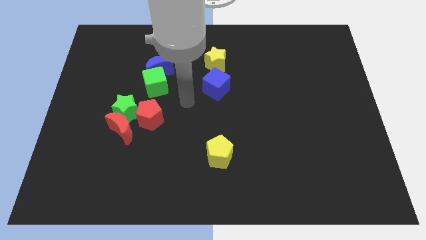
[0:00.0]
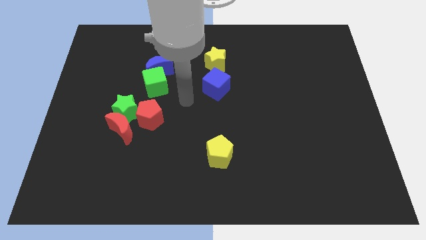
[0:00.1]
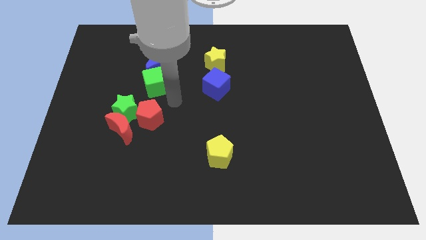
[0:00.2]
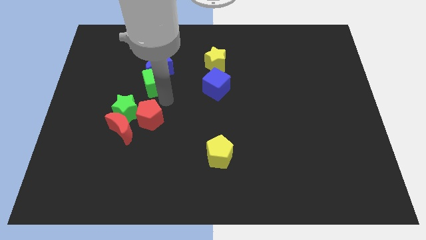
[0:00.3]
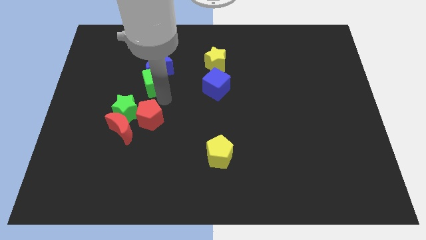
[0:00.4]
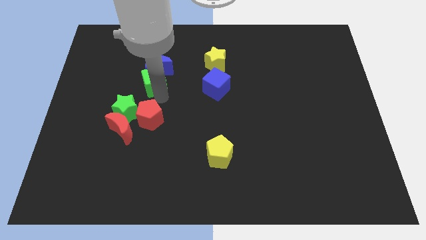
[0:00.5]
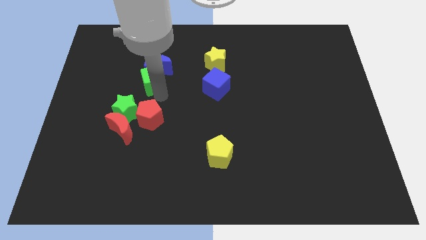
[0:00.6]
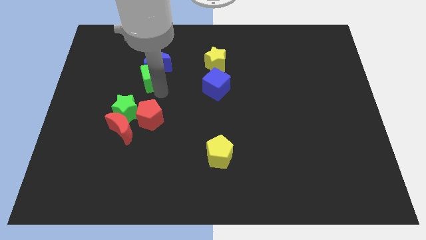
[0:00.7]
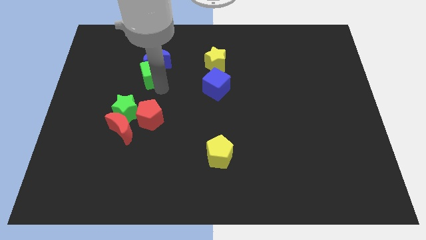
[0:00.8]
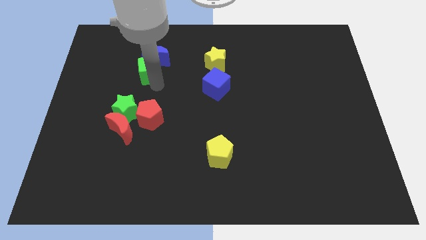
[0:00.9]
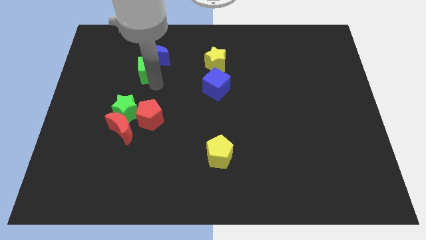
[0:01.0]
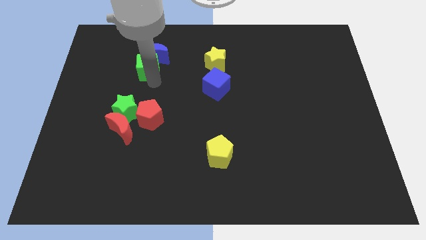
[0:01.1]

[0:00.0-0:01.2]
slide green cube into blue moon

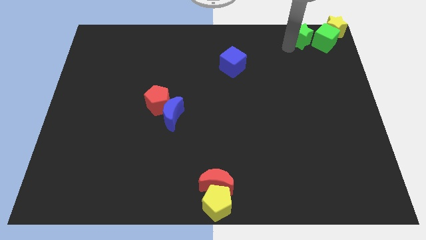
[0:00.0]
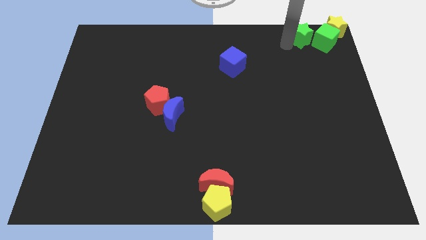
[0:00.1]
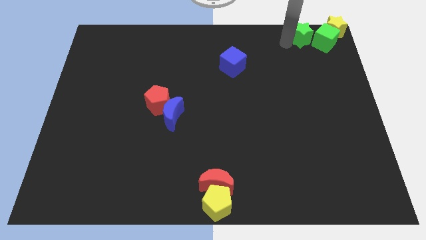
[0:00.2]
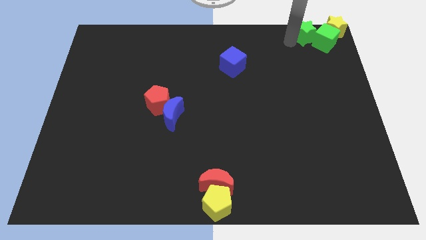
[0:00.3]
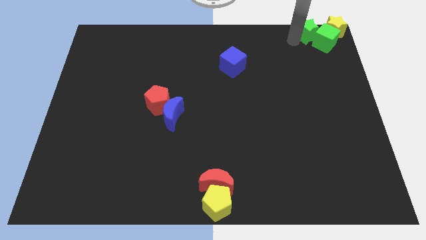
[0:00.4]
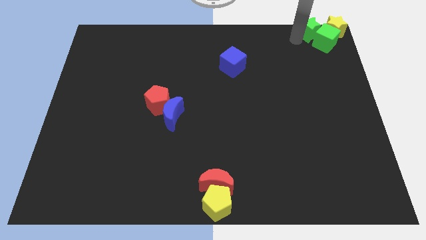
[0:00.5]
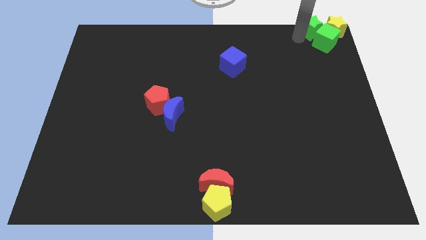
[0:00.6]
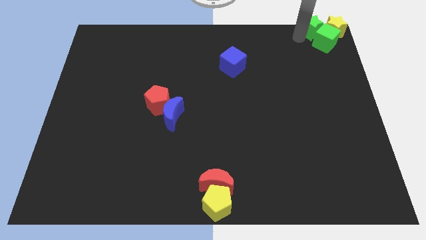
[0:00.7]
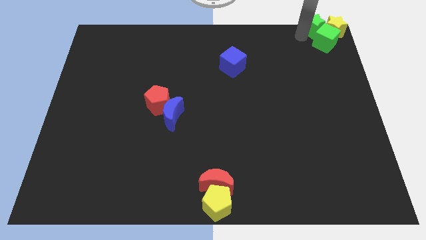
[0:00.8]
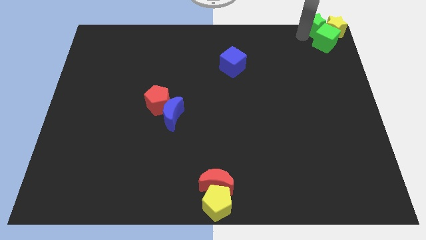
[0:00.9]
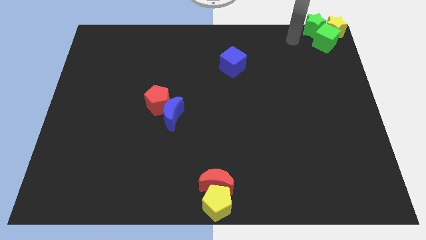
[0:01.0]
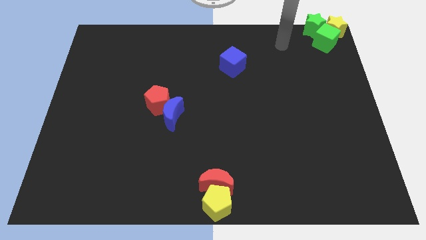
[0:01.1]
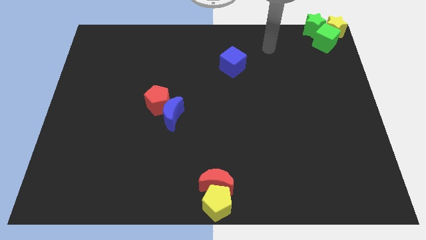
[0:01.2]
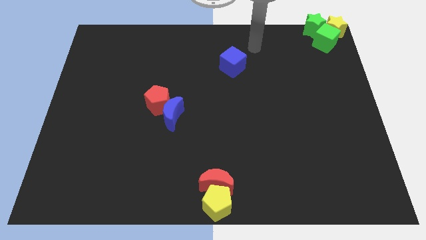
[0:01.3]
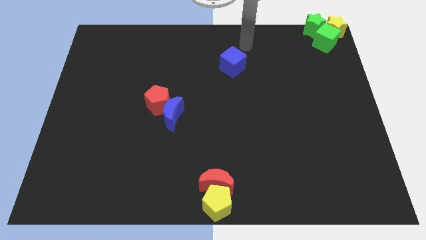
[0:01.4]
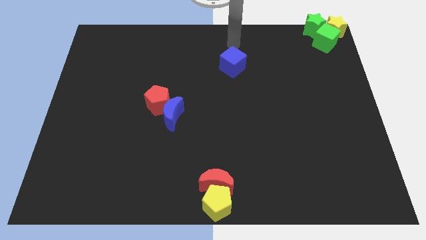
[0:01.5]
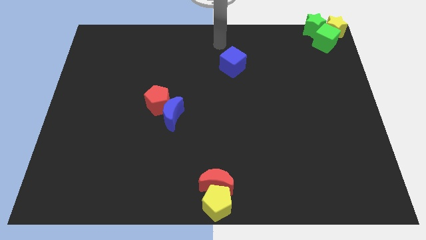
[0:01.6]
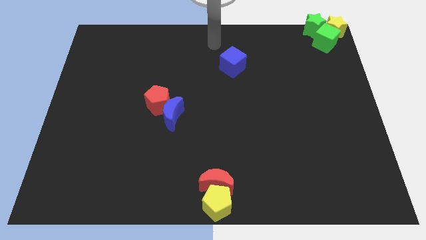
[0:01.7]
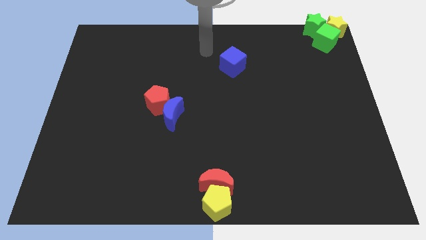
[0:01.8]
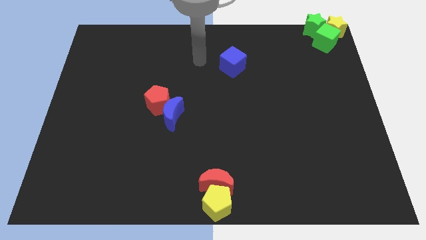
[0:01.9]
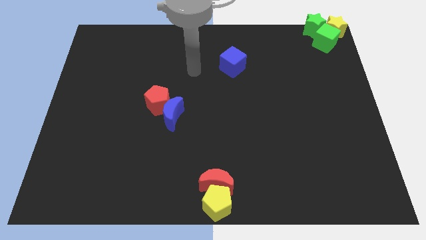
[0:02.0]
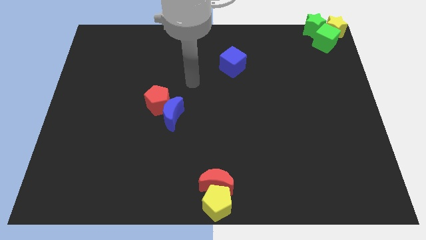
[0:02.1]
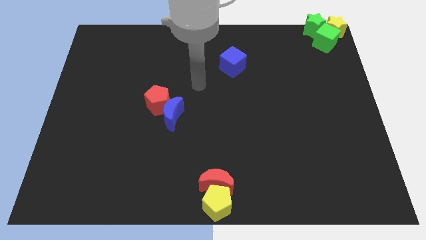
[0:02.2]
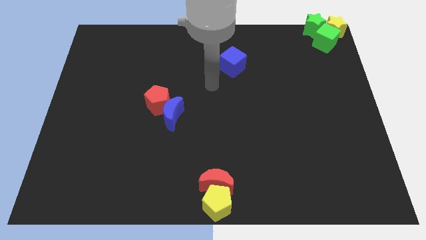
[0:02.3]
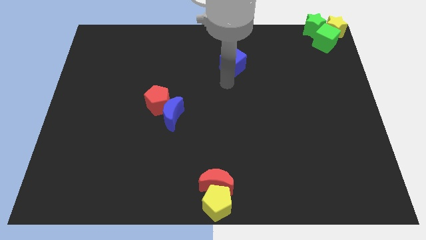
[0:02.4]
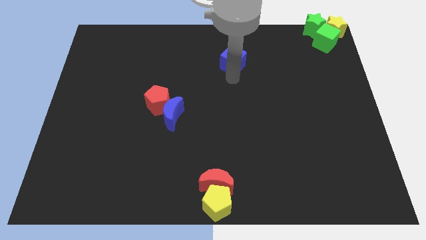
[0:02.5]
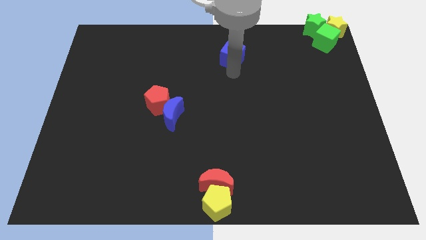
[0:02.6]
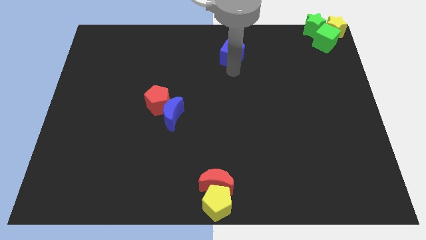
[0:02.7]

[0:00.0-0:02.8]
push the green star into a group of blocks

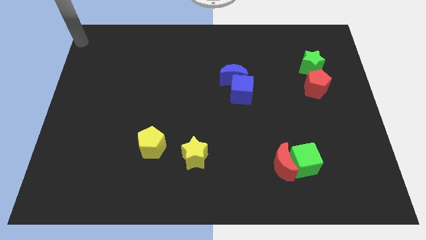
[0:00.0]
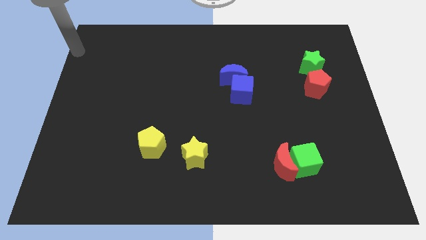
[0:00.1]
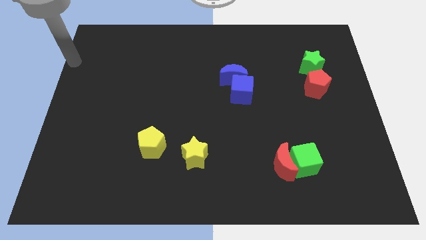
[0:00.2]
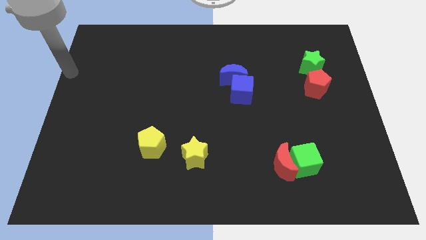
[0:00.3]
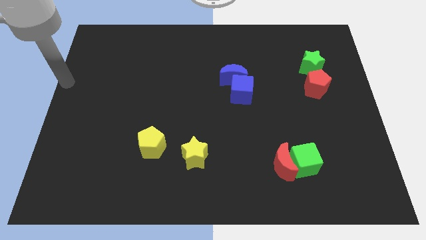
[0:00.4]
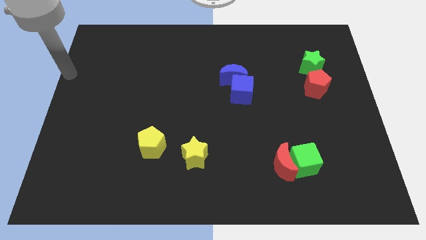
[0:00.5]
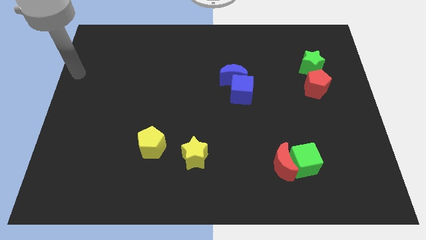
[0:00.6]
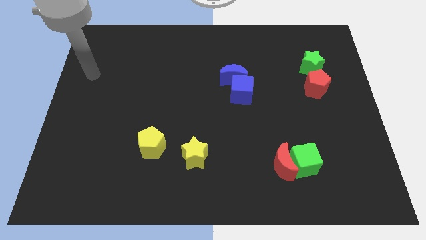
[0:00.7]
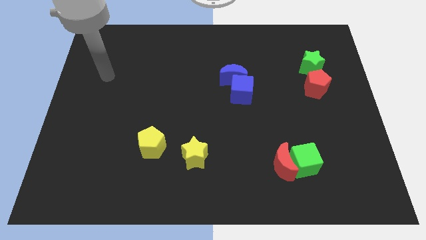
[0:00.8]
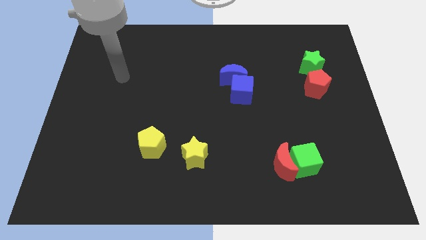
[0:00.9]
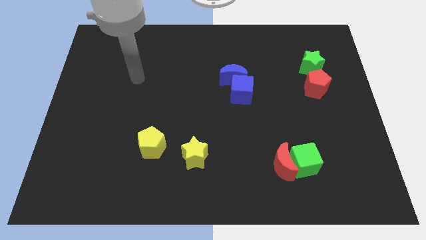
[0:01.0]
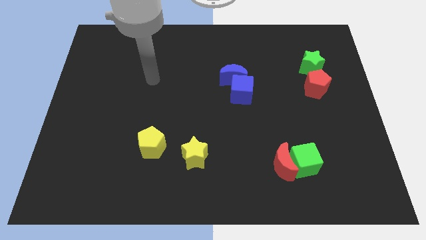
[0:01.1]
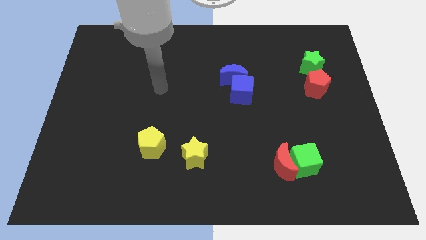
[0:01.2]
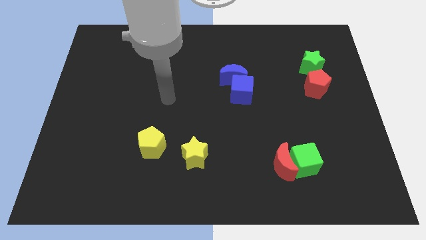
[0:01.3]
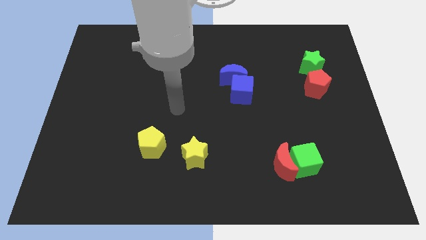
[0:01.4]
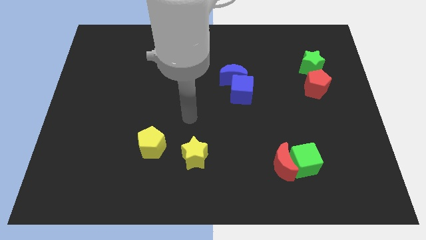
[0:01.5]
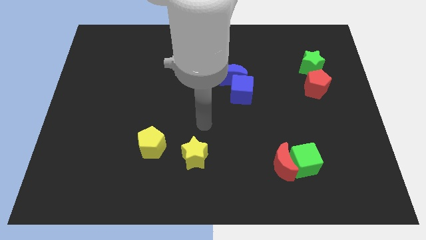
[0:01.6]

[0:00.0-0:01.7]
point your hand above the yellow star

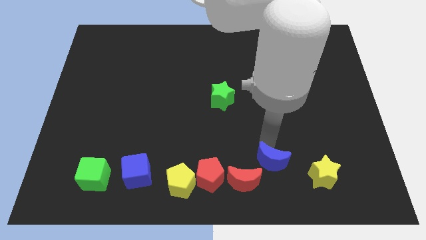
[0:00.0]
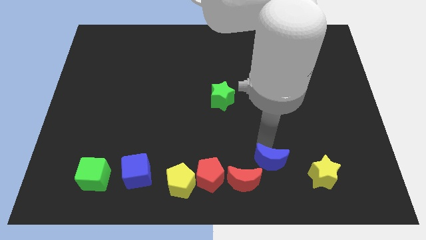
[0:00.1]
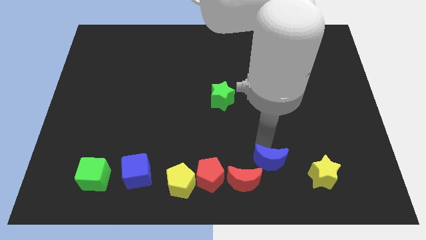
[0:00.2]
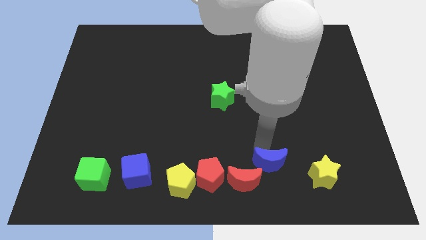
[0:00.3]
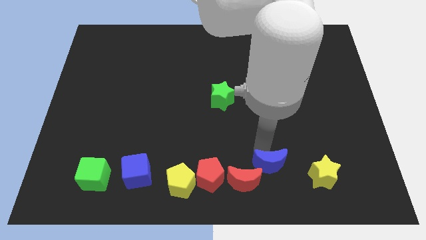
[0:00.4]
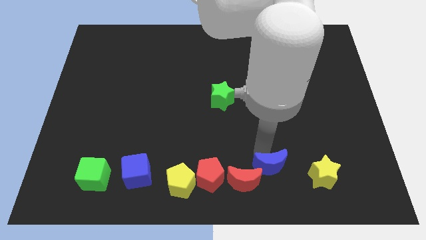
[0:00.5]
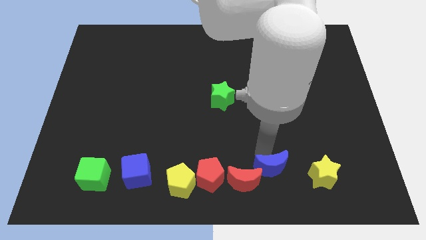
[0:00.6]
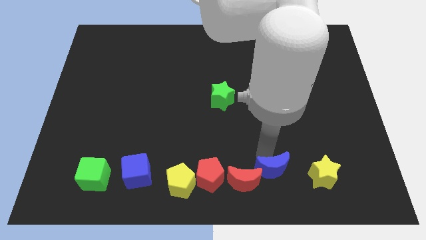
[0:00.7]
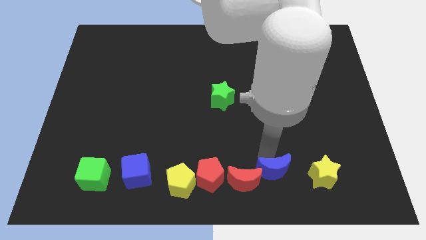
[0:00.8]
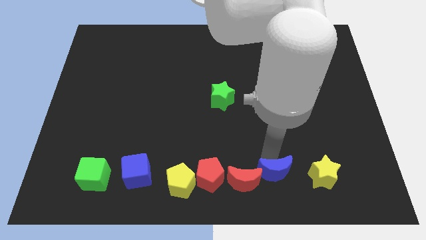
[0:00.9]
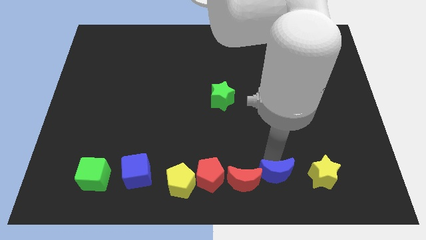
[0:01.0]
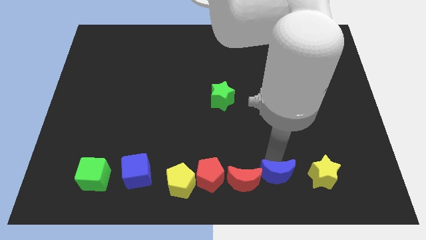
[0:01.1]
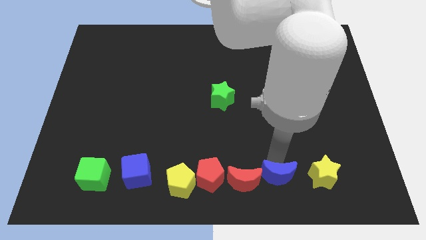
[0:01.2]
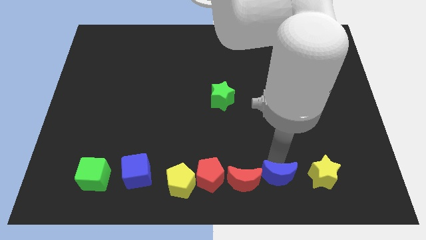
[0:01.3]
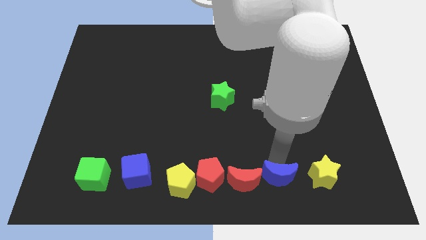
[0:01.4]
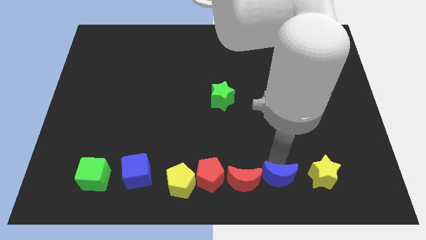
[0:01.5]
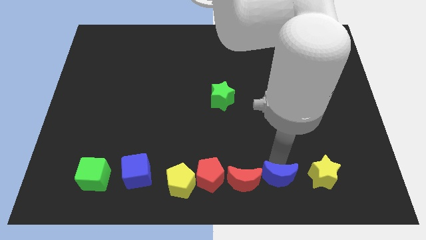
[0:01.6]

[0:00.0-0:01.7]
place the blue crescent to the right side of the red crescent

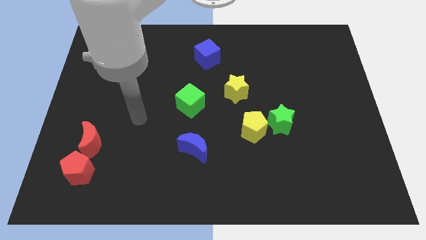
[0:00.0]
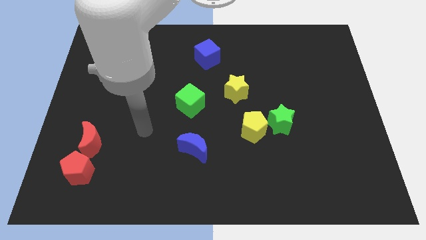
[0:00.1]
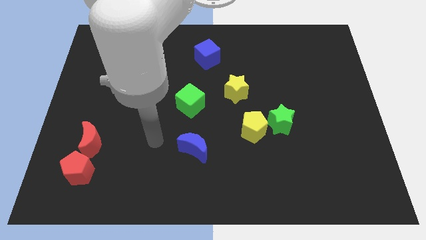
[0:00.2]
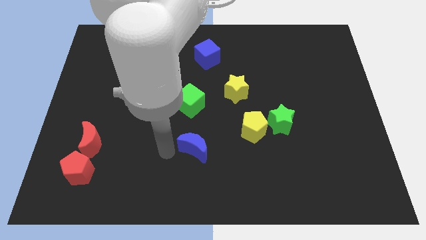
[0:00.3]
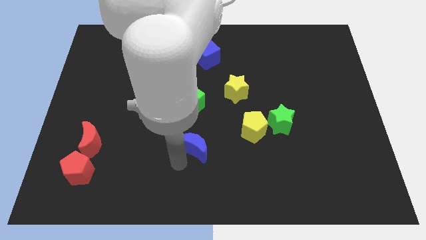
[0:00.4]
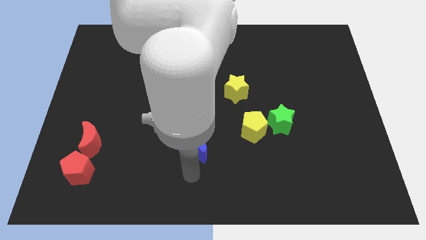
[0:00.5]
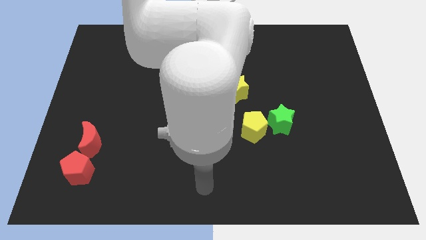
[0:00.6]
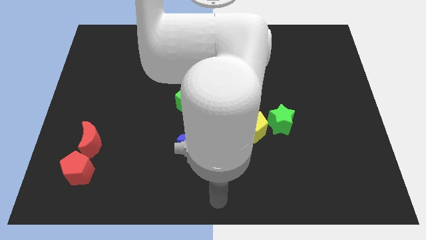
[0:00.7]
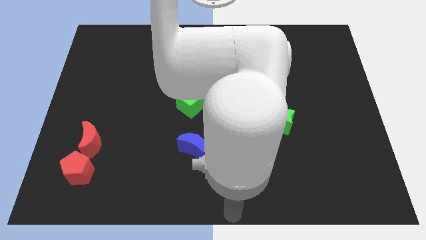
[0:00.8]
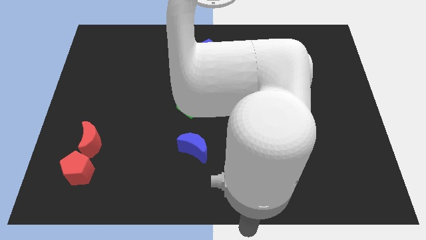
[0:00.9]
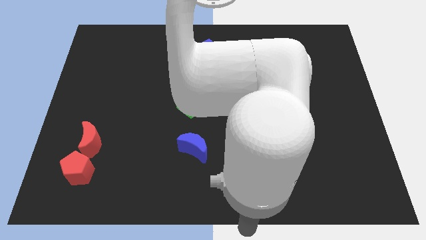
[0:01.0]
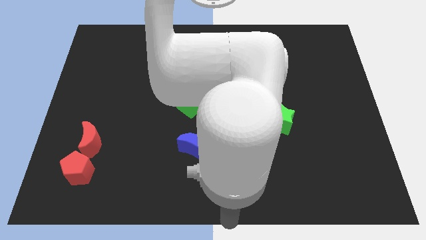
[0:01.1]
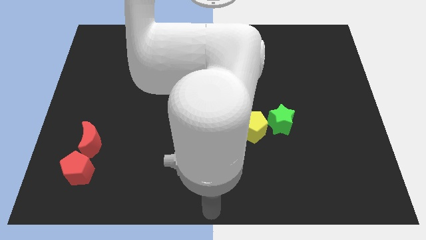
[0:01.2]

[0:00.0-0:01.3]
point your arm at the bottom center of the board

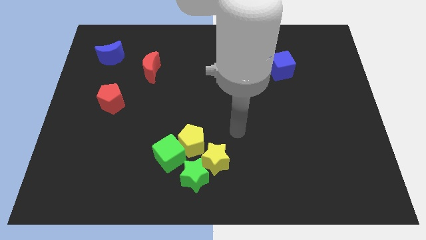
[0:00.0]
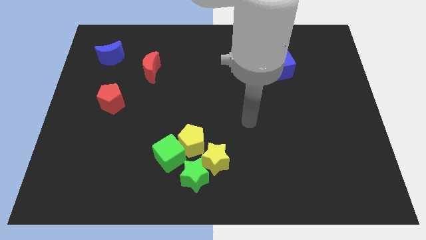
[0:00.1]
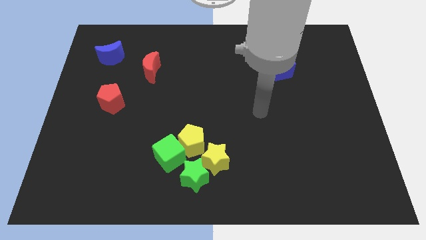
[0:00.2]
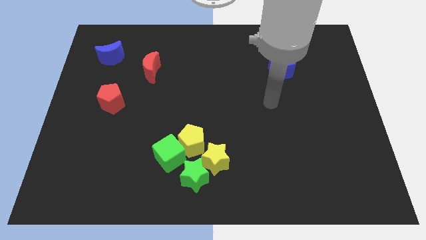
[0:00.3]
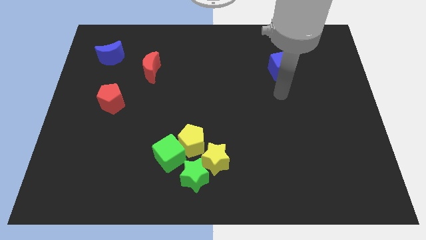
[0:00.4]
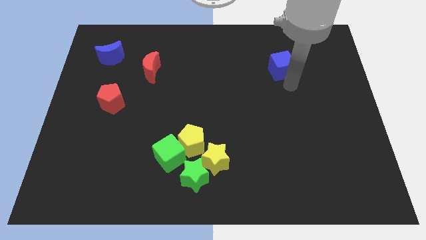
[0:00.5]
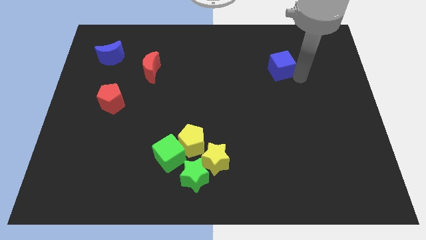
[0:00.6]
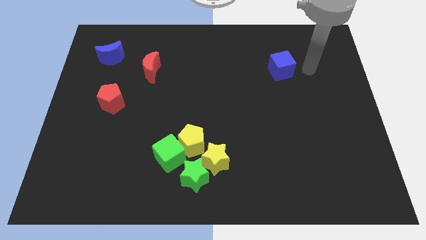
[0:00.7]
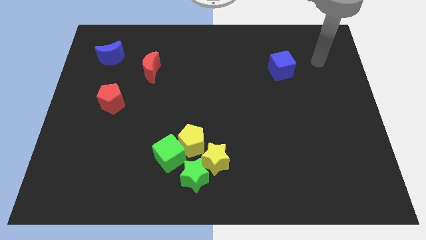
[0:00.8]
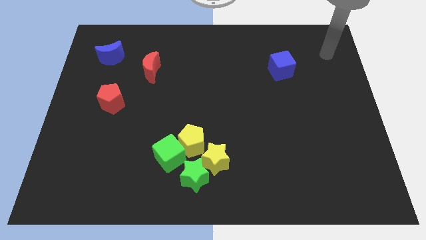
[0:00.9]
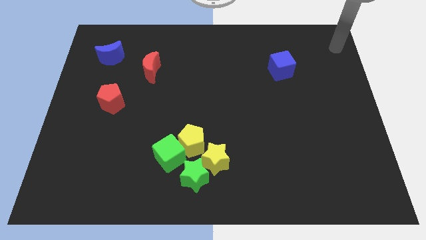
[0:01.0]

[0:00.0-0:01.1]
move your hand to the top right corner
